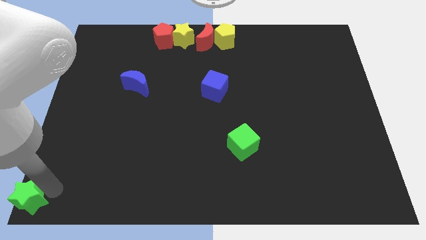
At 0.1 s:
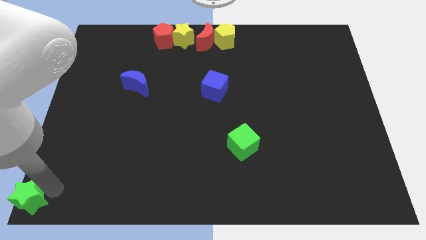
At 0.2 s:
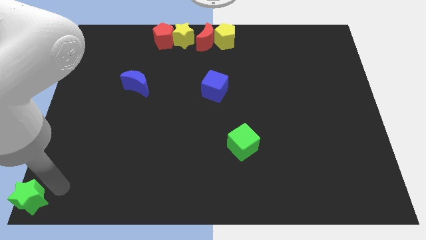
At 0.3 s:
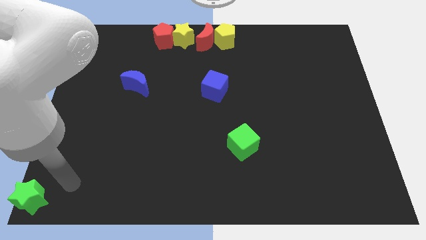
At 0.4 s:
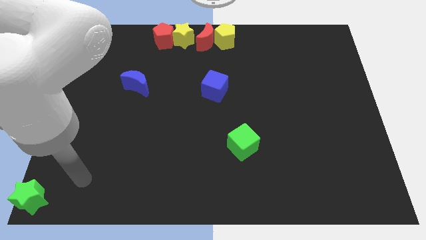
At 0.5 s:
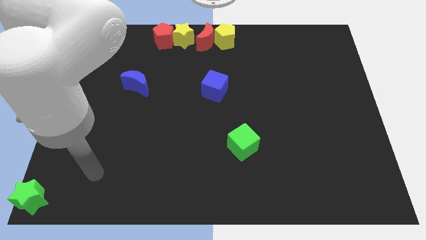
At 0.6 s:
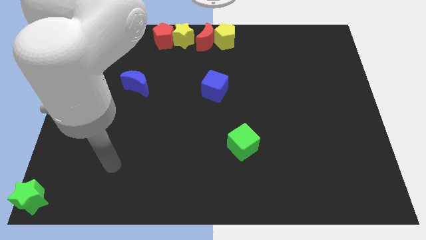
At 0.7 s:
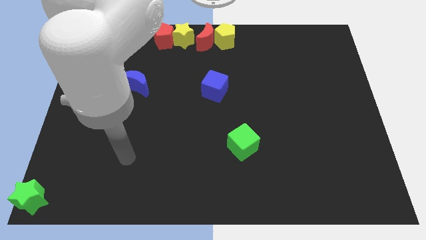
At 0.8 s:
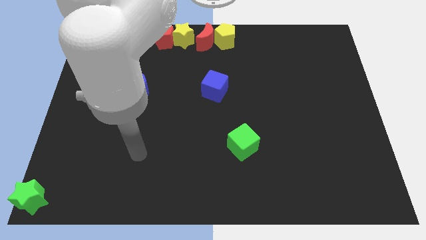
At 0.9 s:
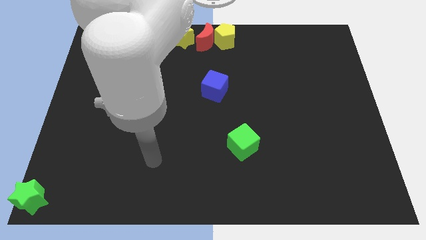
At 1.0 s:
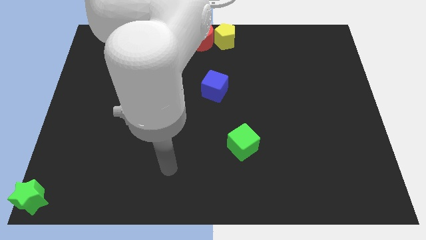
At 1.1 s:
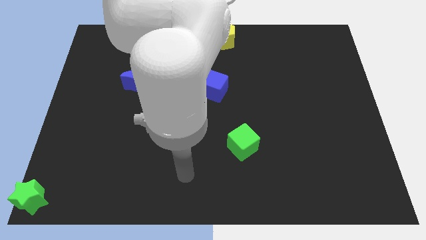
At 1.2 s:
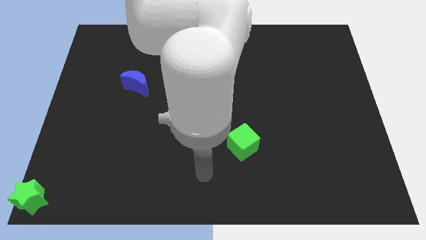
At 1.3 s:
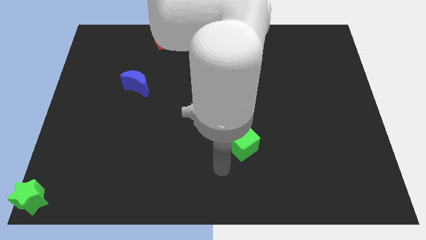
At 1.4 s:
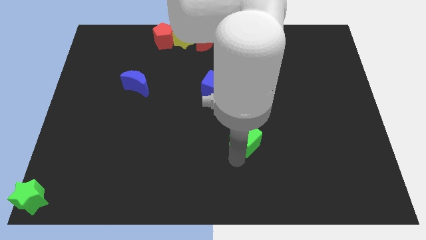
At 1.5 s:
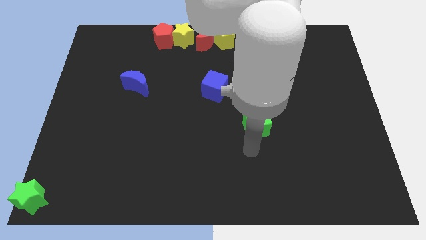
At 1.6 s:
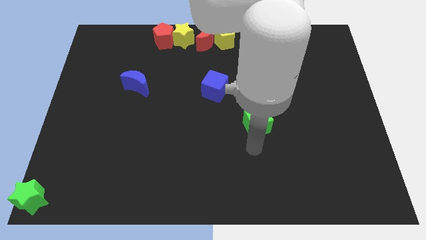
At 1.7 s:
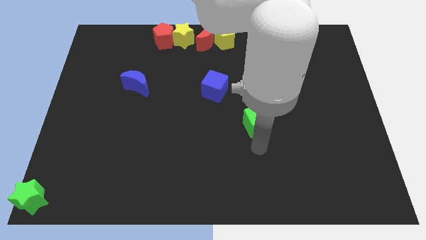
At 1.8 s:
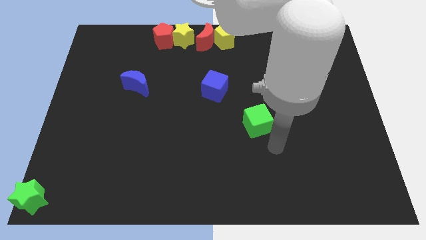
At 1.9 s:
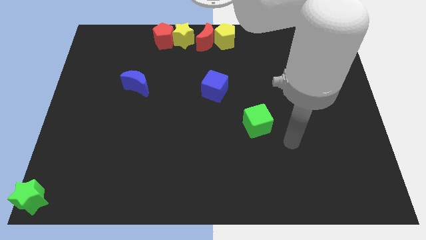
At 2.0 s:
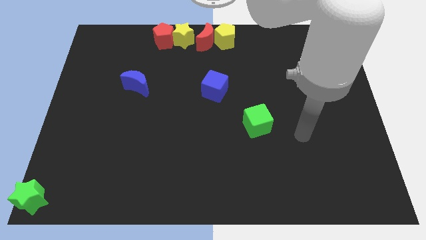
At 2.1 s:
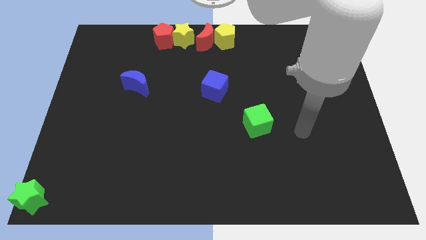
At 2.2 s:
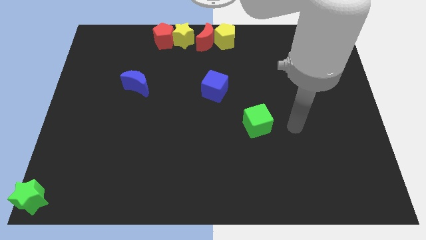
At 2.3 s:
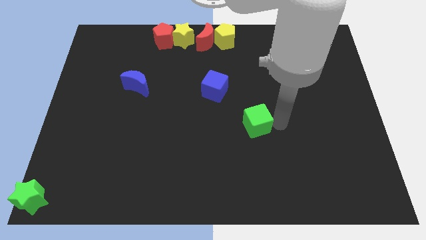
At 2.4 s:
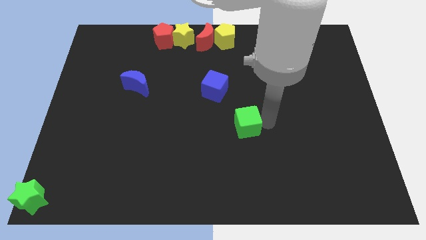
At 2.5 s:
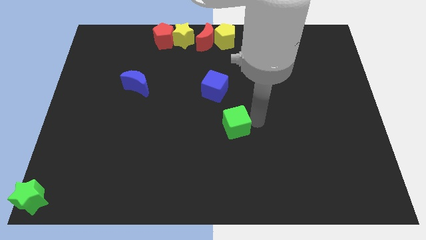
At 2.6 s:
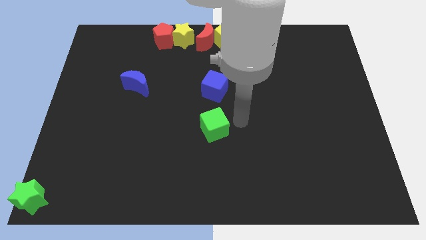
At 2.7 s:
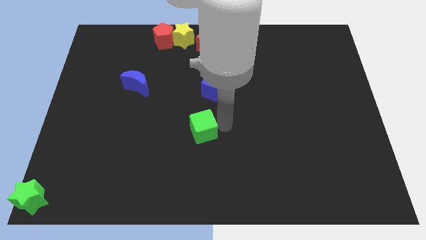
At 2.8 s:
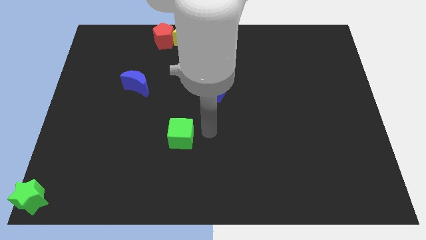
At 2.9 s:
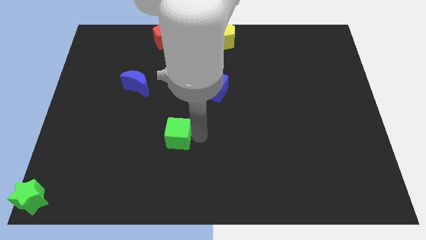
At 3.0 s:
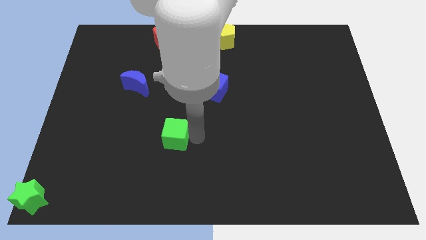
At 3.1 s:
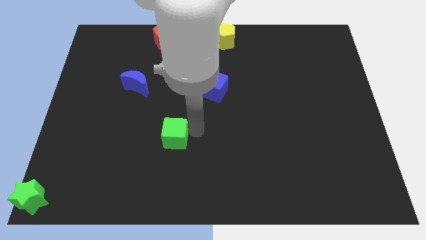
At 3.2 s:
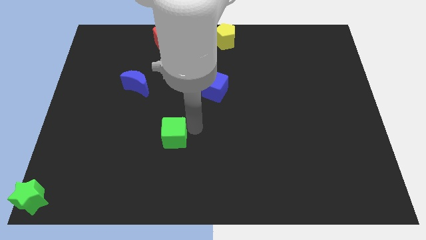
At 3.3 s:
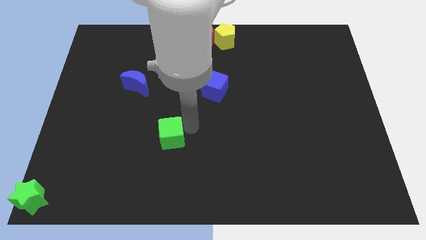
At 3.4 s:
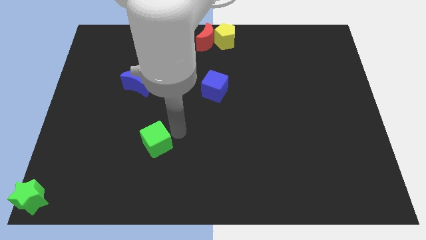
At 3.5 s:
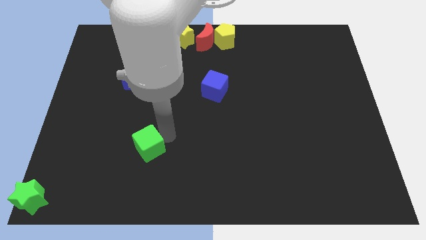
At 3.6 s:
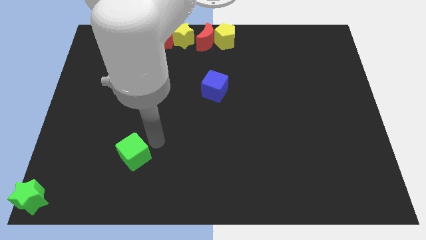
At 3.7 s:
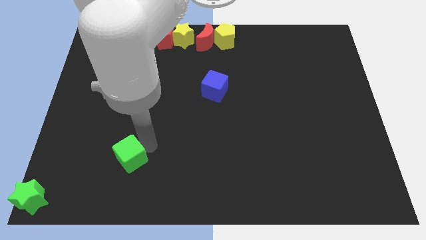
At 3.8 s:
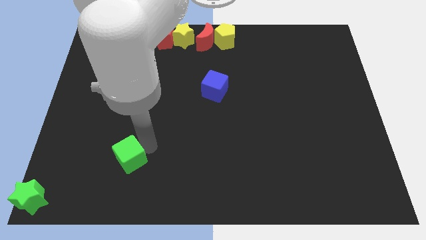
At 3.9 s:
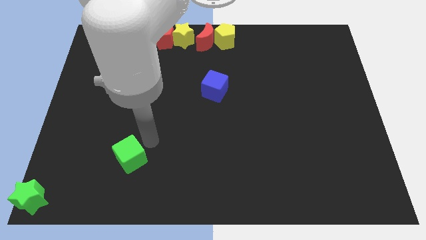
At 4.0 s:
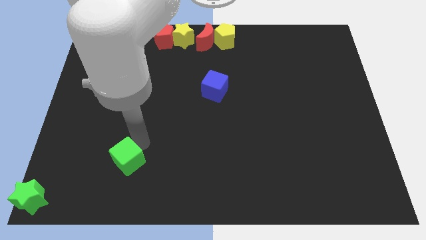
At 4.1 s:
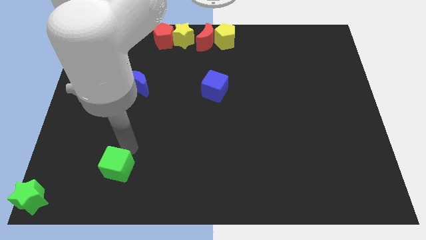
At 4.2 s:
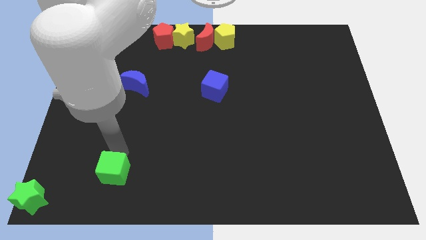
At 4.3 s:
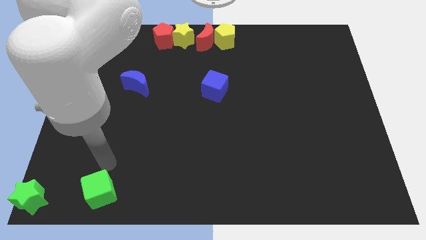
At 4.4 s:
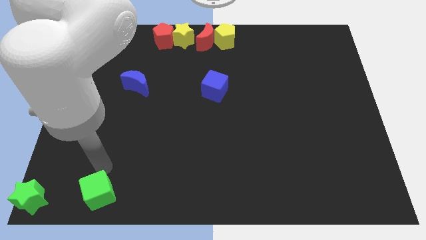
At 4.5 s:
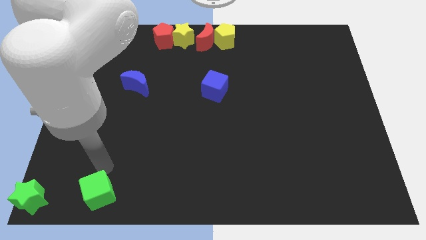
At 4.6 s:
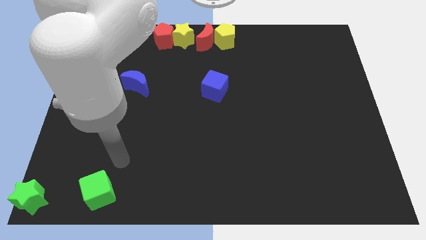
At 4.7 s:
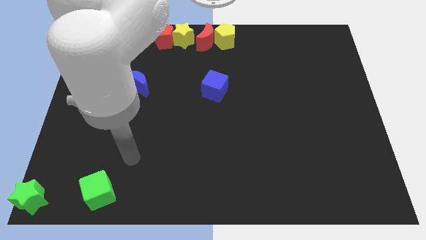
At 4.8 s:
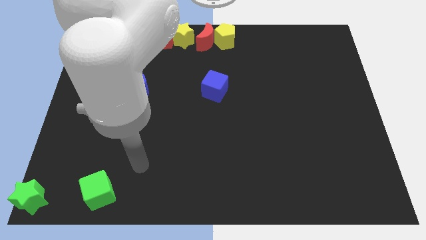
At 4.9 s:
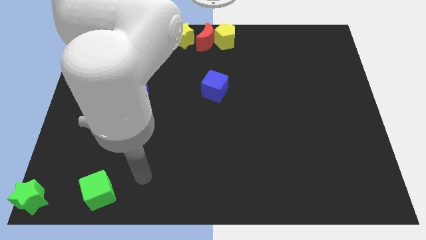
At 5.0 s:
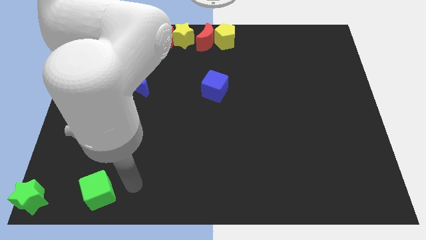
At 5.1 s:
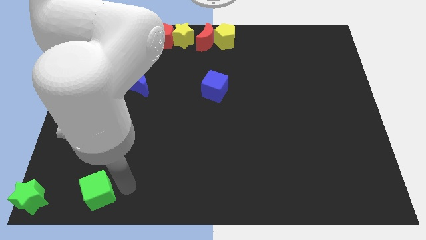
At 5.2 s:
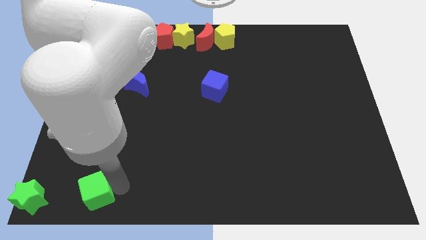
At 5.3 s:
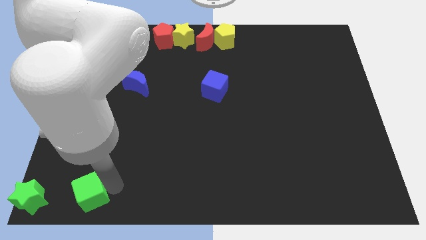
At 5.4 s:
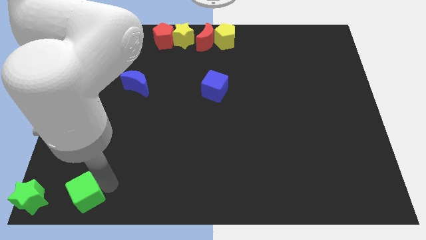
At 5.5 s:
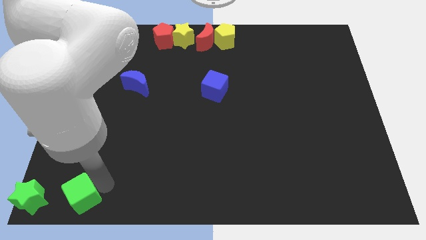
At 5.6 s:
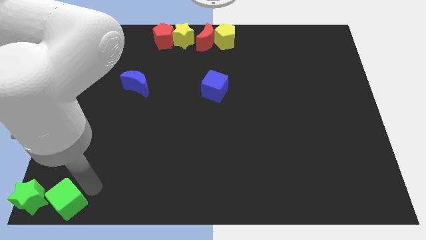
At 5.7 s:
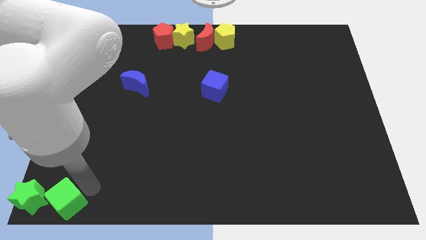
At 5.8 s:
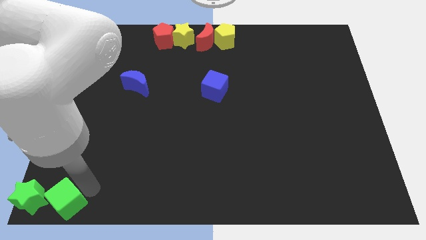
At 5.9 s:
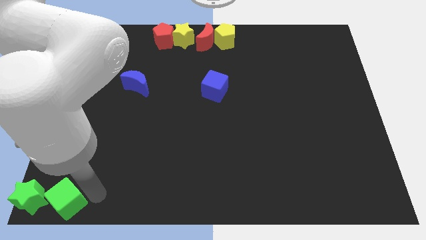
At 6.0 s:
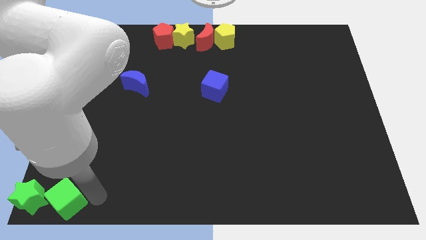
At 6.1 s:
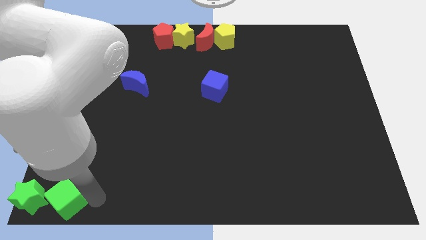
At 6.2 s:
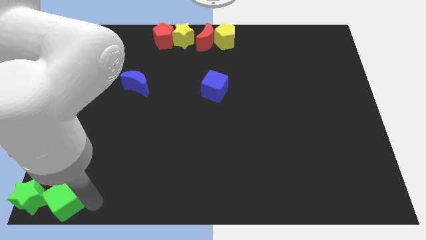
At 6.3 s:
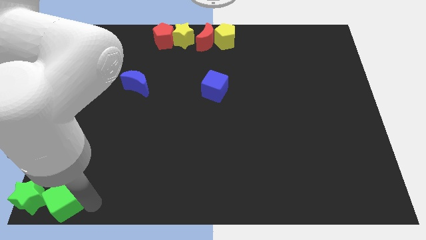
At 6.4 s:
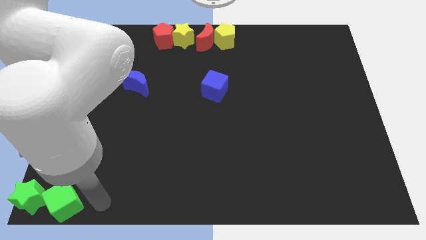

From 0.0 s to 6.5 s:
move the green cube beside the right side of green star

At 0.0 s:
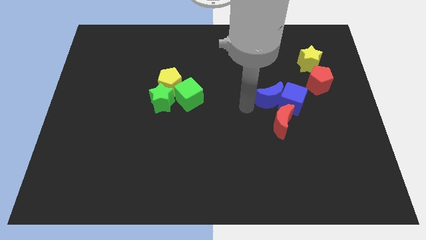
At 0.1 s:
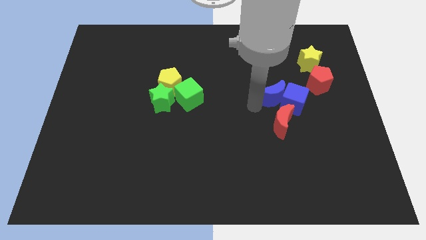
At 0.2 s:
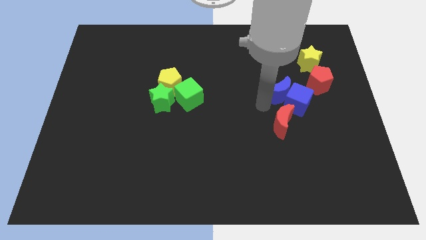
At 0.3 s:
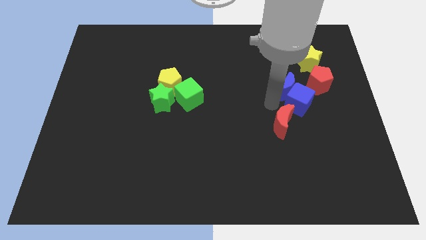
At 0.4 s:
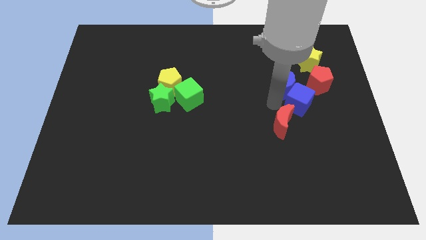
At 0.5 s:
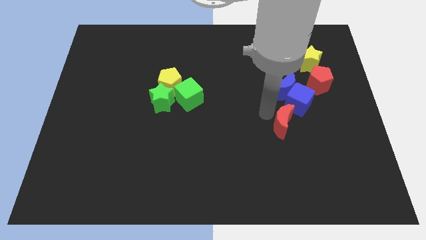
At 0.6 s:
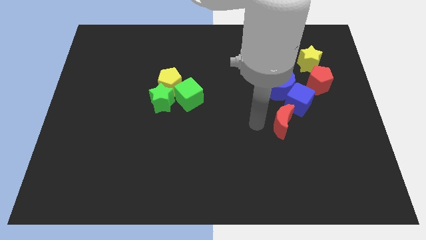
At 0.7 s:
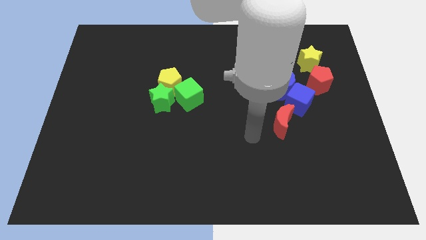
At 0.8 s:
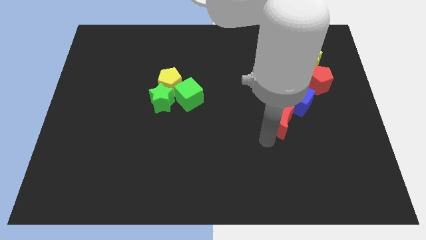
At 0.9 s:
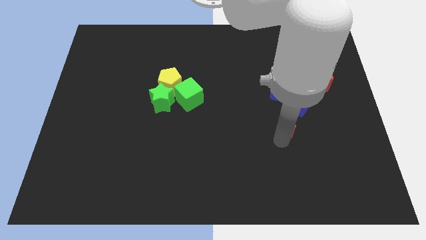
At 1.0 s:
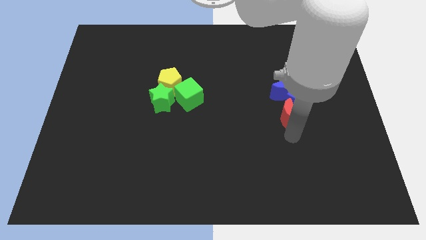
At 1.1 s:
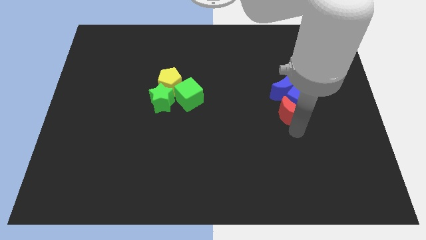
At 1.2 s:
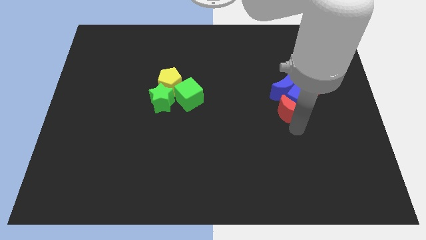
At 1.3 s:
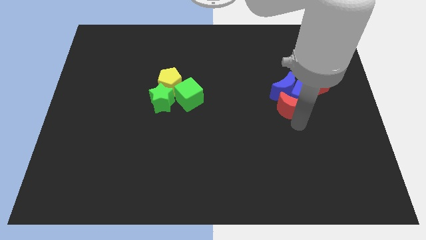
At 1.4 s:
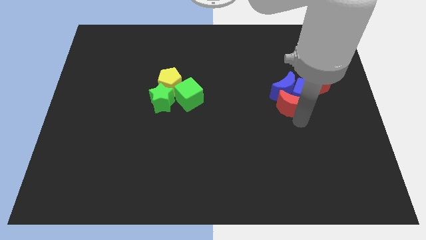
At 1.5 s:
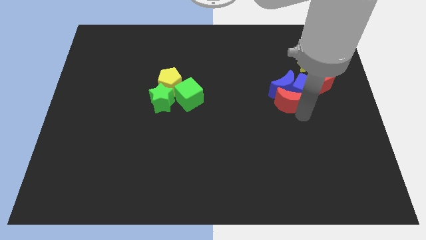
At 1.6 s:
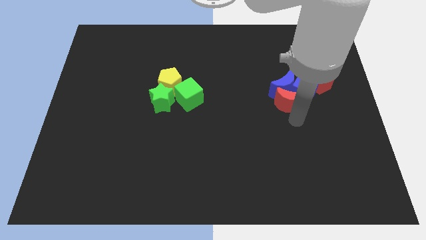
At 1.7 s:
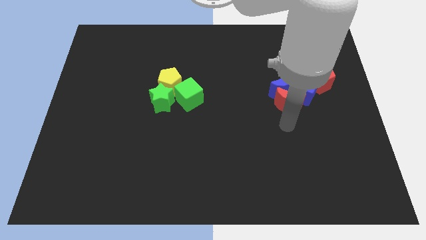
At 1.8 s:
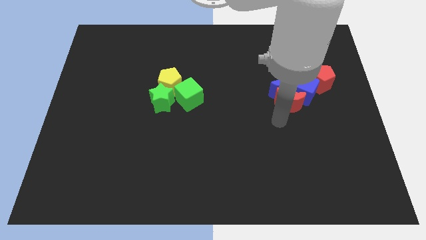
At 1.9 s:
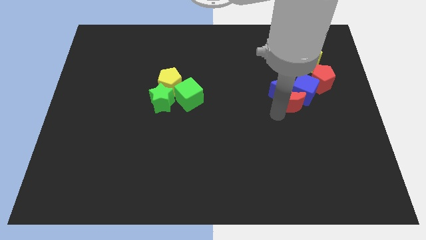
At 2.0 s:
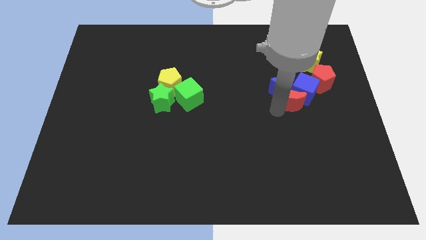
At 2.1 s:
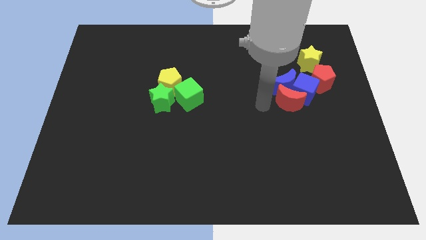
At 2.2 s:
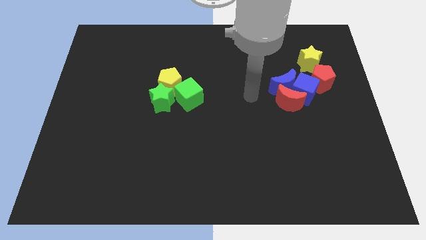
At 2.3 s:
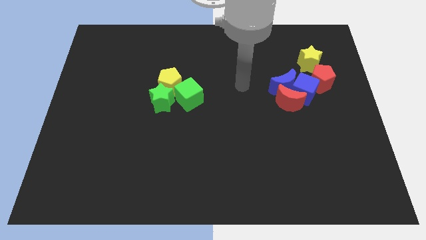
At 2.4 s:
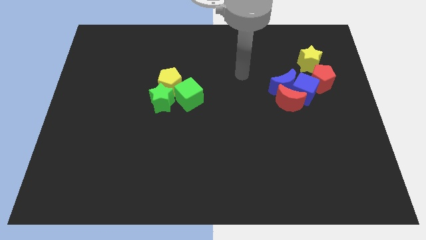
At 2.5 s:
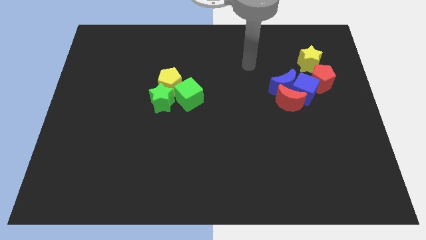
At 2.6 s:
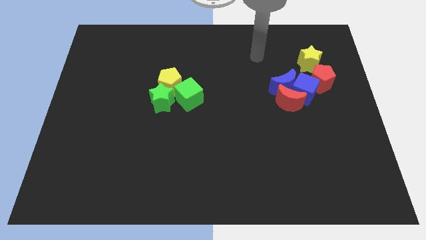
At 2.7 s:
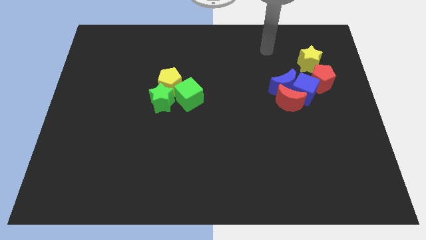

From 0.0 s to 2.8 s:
push the blue blocks with the red crescent into the red pentagon
